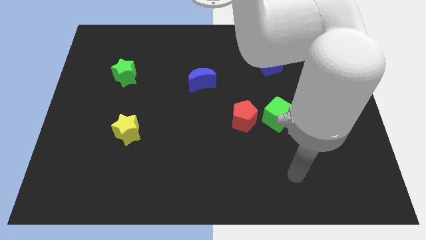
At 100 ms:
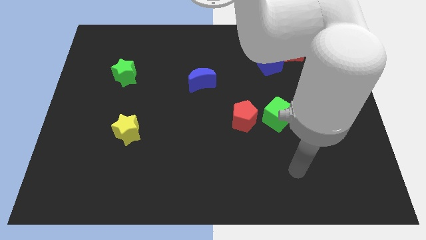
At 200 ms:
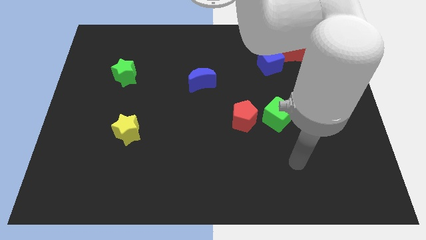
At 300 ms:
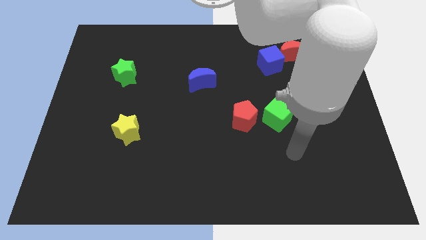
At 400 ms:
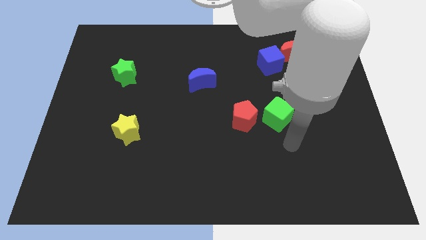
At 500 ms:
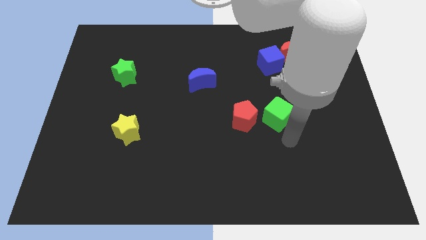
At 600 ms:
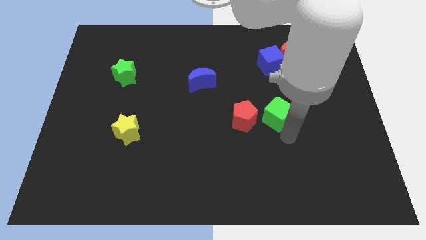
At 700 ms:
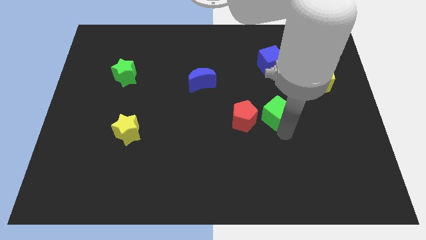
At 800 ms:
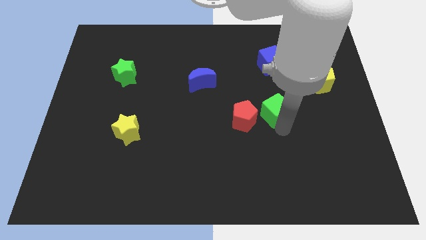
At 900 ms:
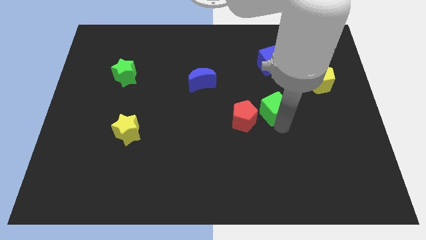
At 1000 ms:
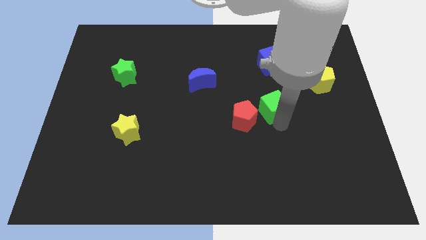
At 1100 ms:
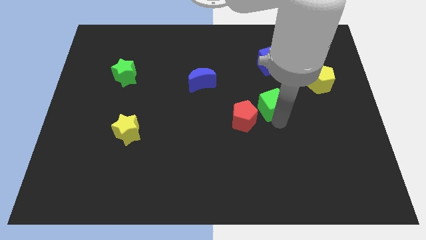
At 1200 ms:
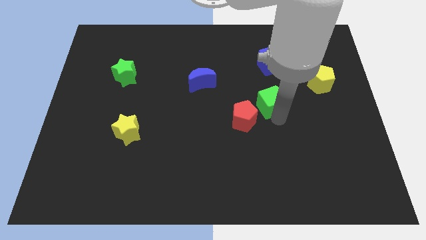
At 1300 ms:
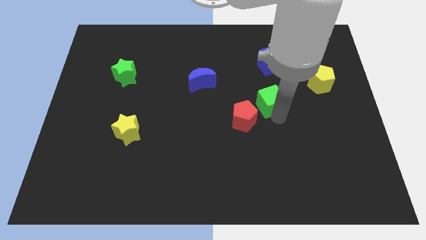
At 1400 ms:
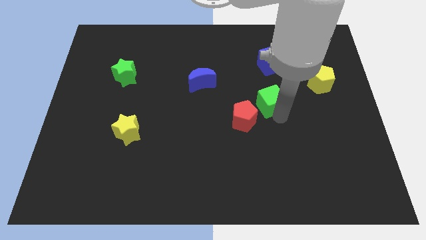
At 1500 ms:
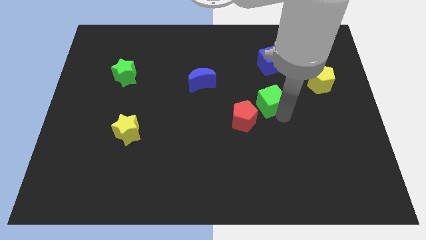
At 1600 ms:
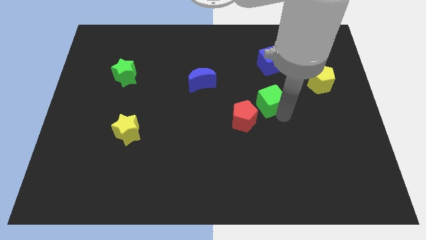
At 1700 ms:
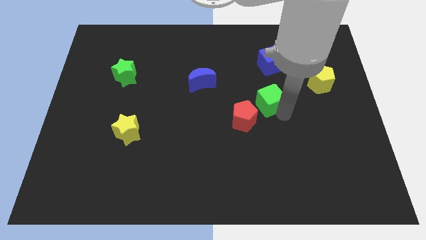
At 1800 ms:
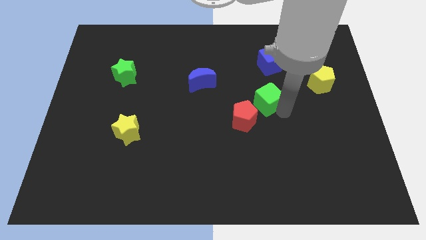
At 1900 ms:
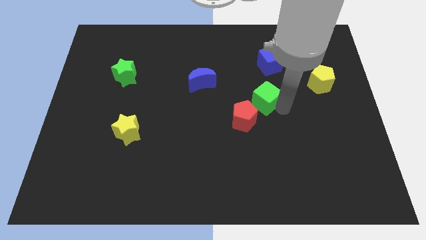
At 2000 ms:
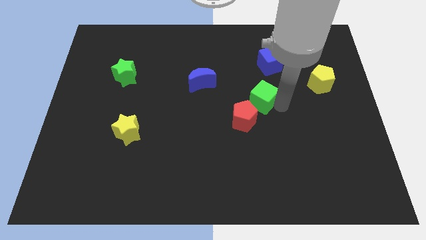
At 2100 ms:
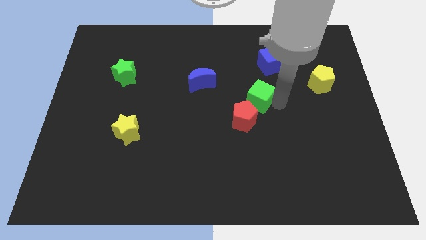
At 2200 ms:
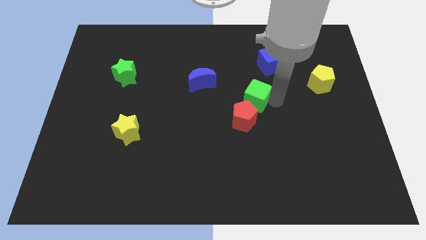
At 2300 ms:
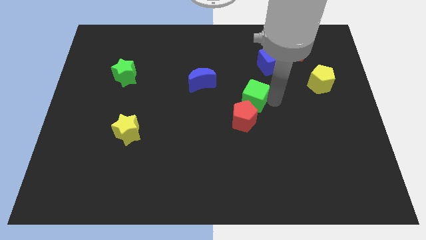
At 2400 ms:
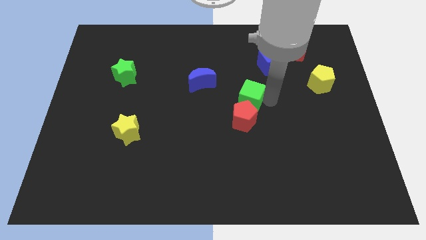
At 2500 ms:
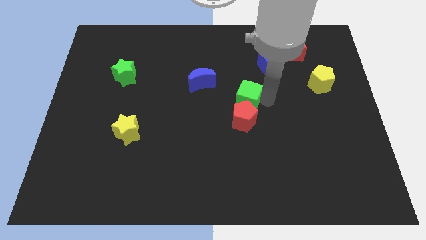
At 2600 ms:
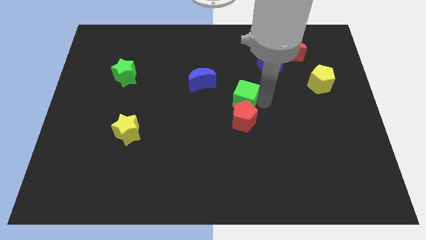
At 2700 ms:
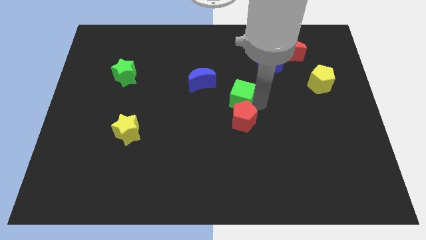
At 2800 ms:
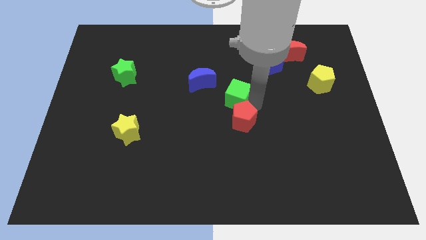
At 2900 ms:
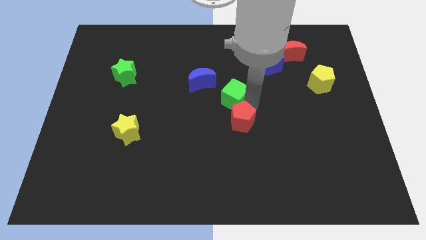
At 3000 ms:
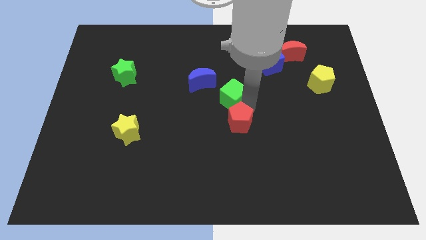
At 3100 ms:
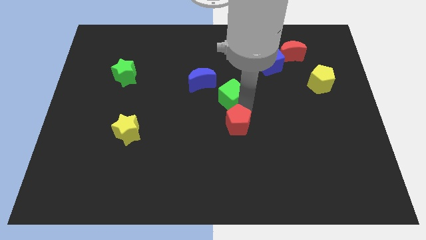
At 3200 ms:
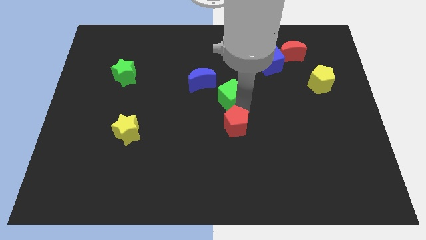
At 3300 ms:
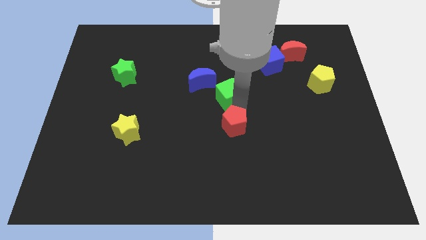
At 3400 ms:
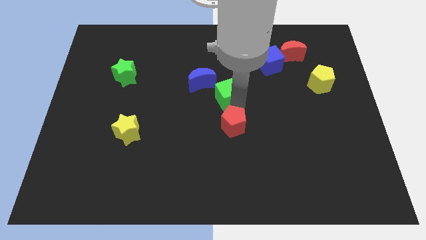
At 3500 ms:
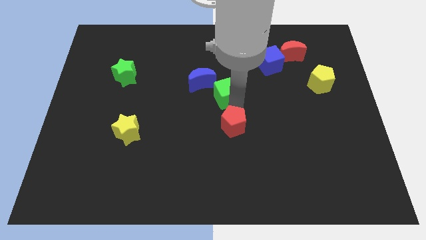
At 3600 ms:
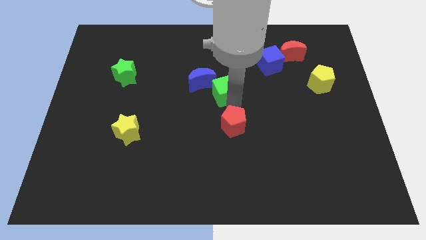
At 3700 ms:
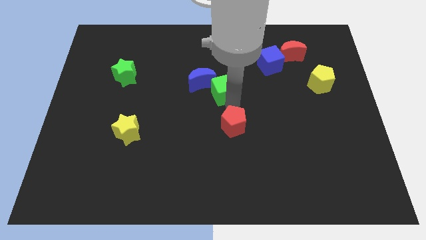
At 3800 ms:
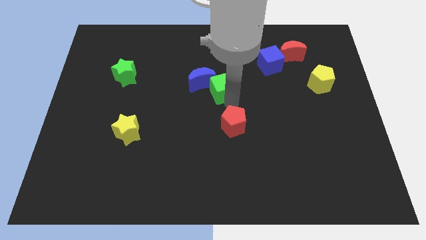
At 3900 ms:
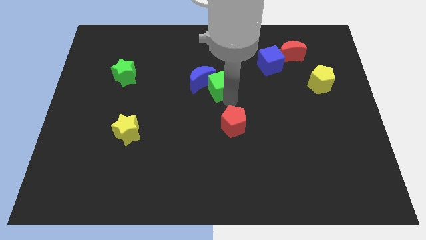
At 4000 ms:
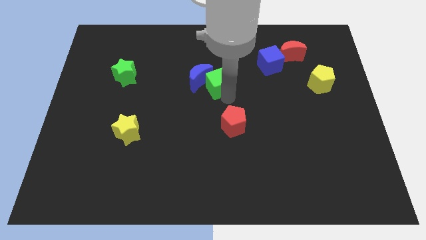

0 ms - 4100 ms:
move the green cube next to the blue moon

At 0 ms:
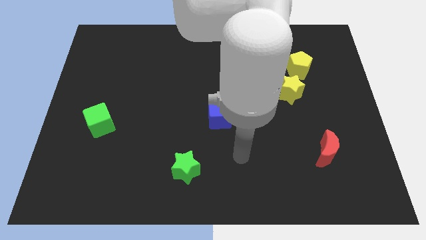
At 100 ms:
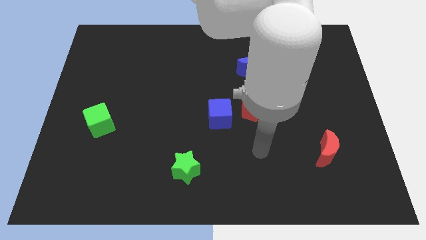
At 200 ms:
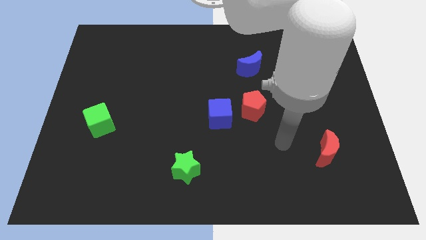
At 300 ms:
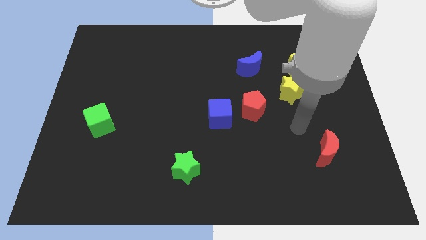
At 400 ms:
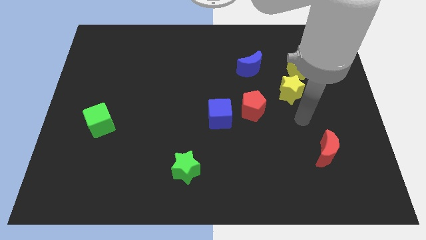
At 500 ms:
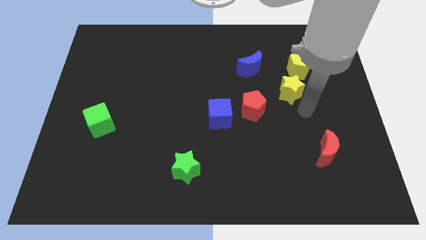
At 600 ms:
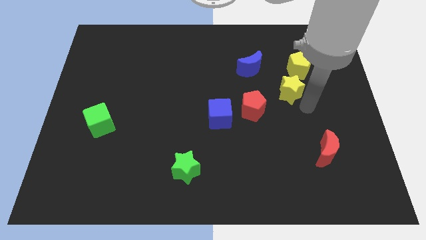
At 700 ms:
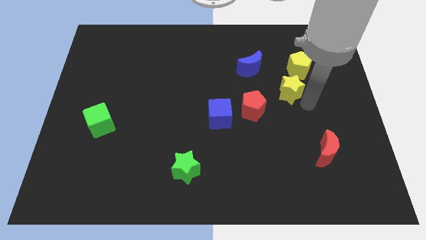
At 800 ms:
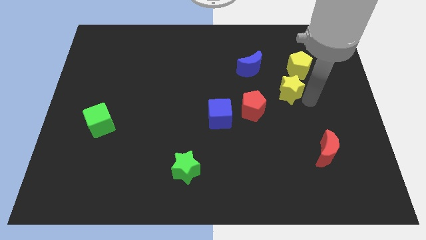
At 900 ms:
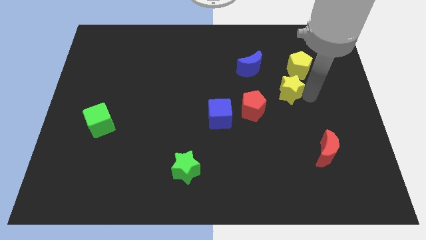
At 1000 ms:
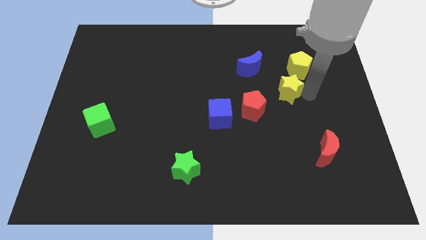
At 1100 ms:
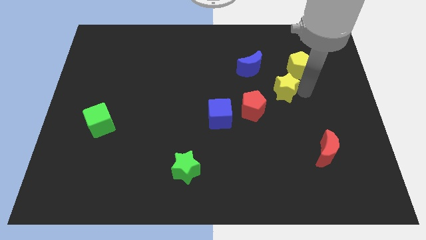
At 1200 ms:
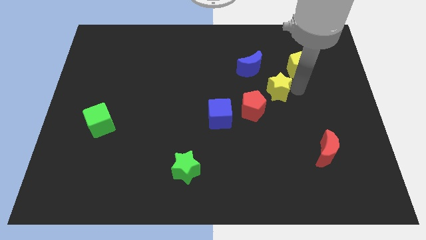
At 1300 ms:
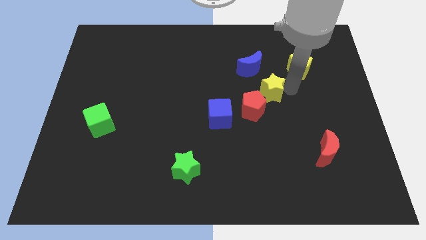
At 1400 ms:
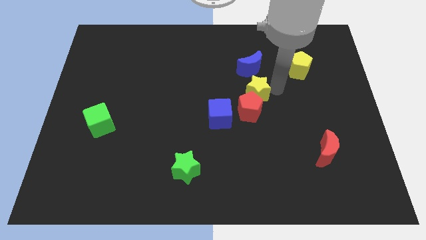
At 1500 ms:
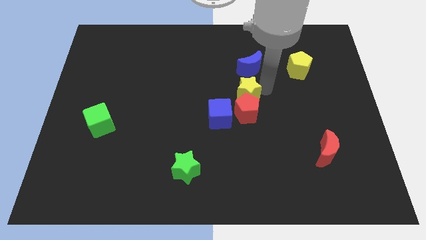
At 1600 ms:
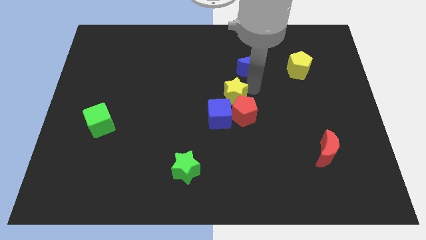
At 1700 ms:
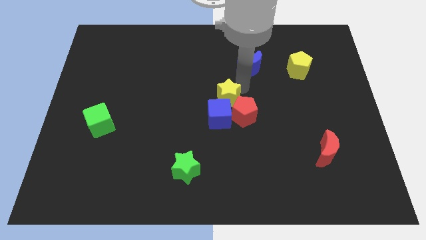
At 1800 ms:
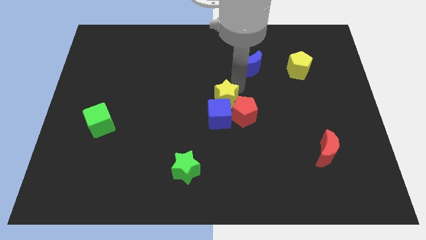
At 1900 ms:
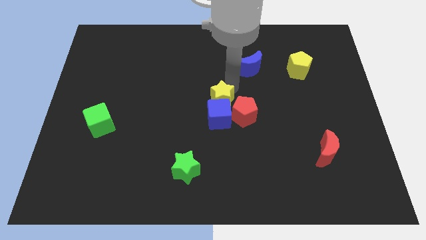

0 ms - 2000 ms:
put the yellow star next to the blue cube

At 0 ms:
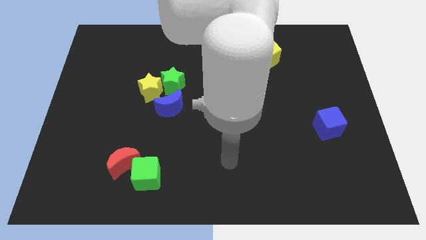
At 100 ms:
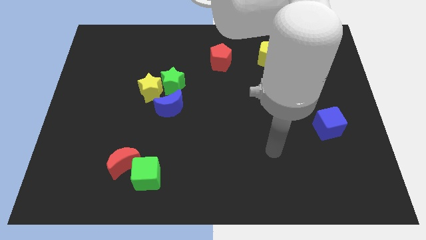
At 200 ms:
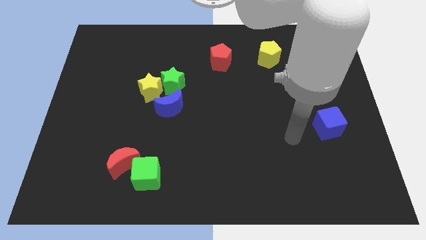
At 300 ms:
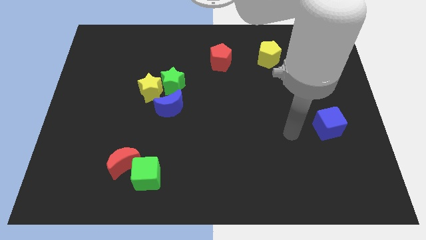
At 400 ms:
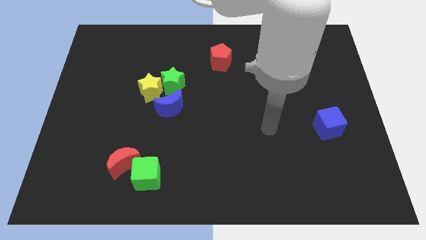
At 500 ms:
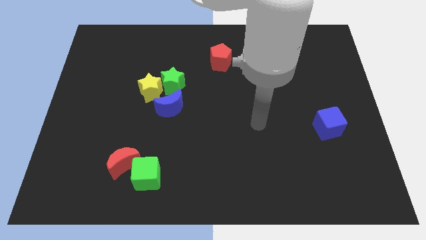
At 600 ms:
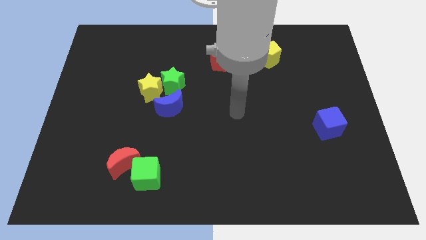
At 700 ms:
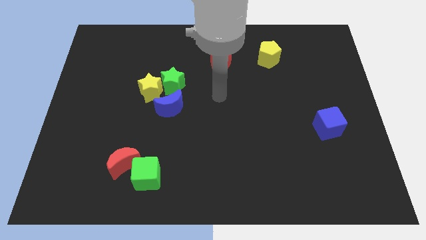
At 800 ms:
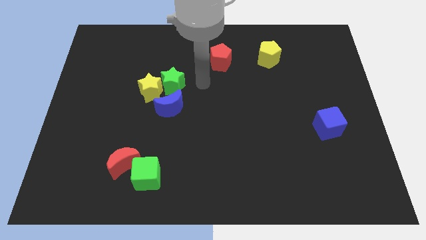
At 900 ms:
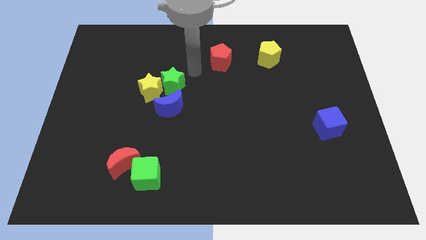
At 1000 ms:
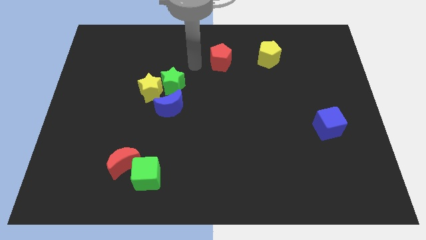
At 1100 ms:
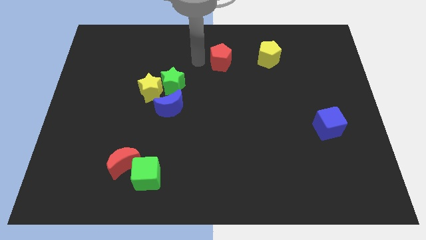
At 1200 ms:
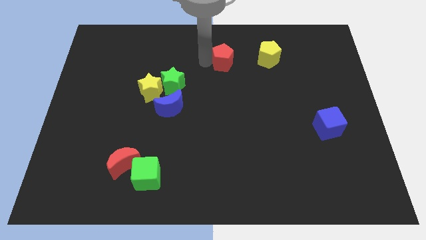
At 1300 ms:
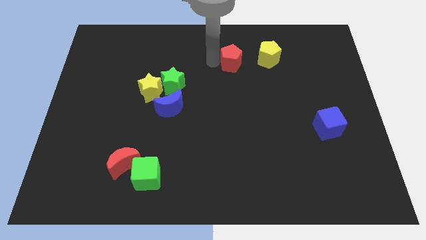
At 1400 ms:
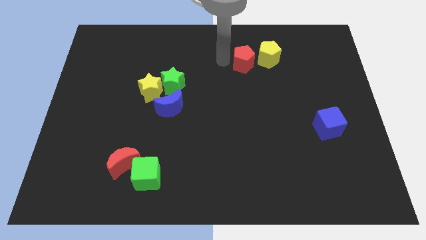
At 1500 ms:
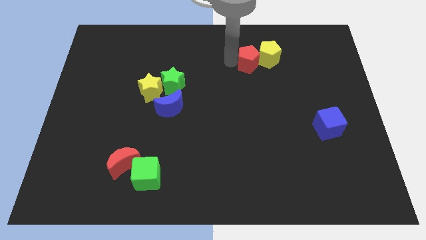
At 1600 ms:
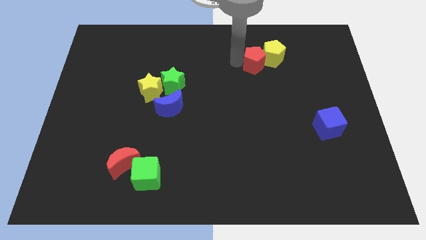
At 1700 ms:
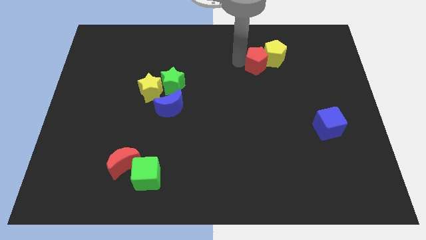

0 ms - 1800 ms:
put the red pentagon towards the yellow pentagon

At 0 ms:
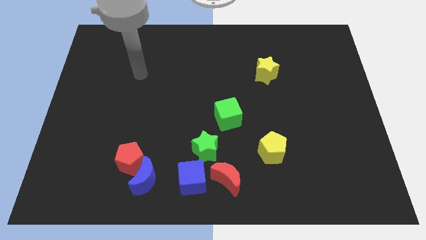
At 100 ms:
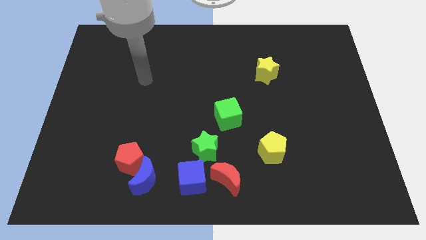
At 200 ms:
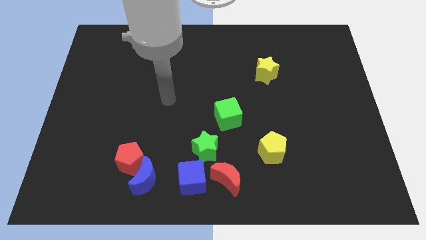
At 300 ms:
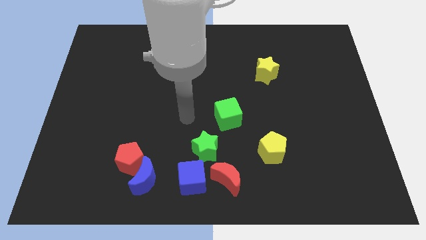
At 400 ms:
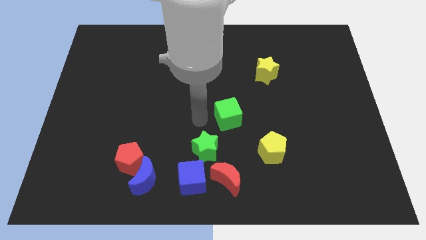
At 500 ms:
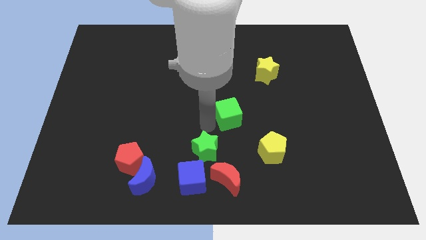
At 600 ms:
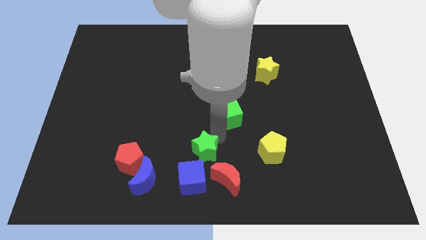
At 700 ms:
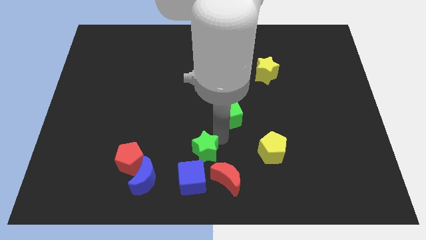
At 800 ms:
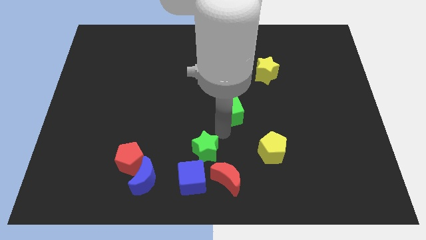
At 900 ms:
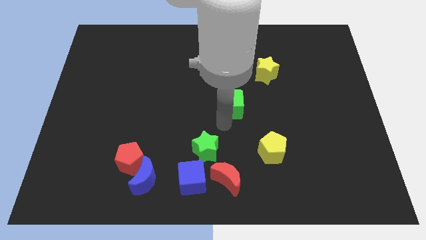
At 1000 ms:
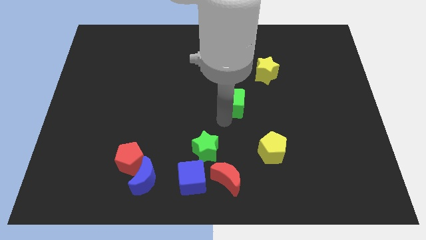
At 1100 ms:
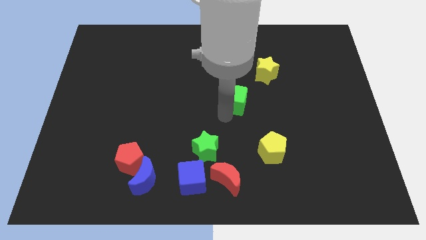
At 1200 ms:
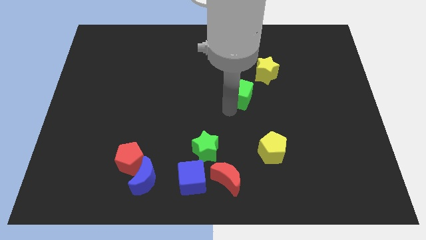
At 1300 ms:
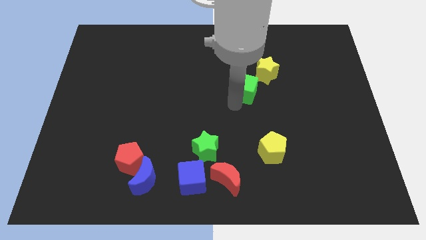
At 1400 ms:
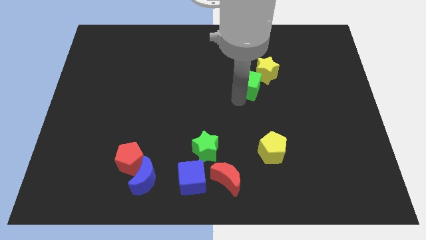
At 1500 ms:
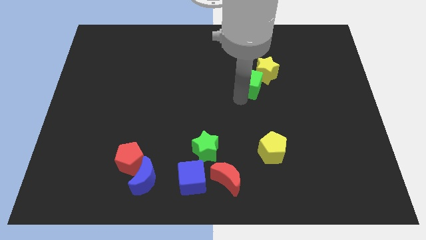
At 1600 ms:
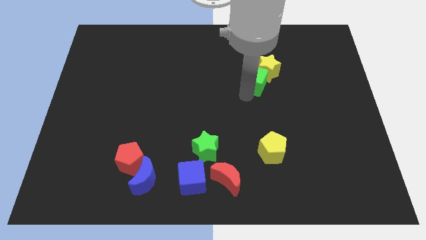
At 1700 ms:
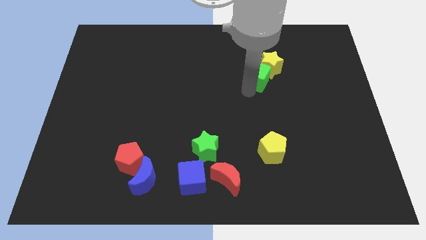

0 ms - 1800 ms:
push the green cube to the yellow star
